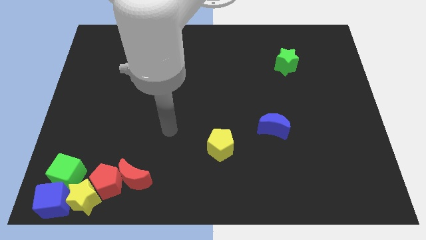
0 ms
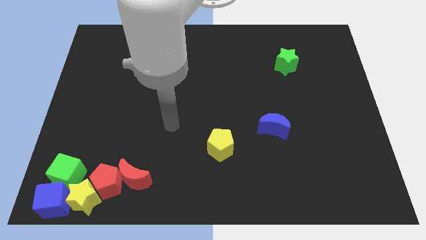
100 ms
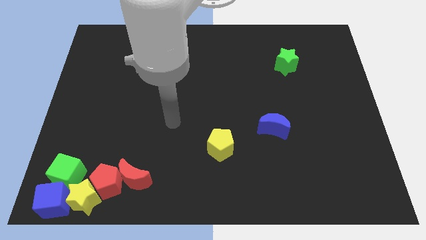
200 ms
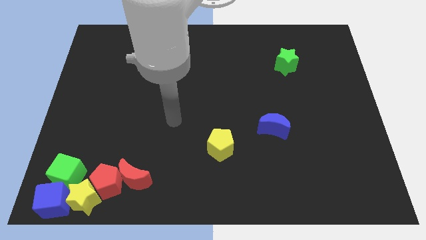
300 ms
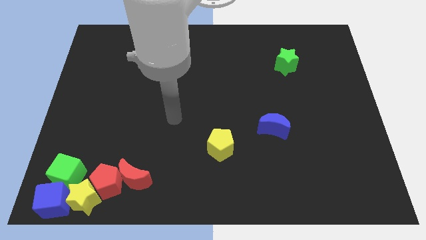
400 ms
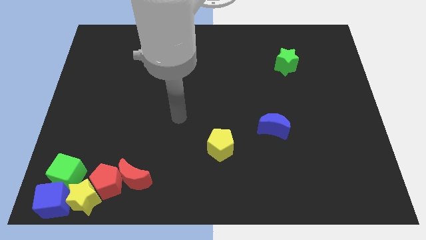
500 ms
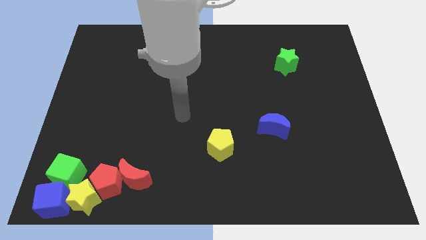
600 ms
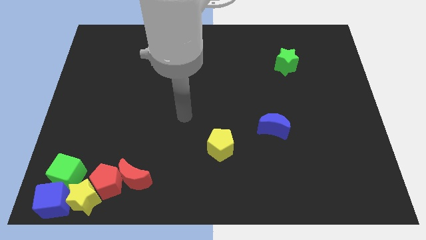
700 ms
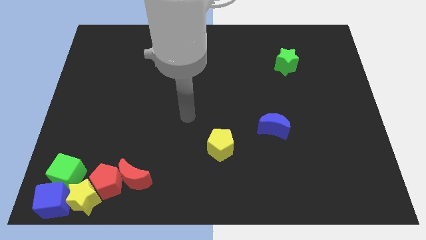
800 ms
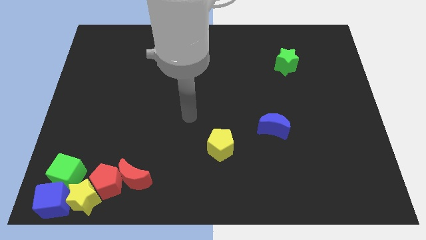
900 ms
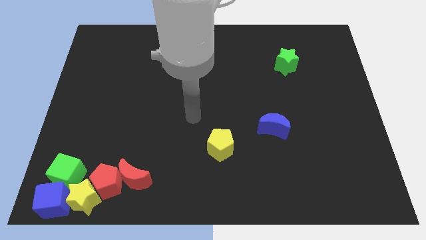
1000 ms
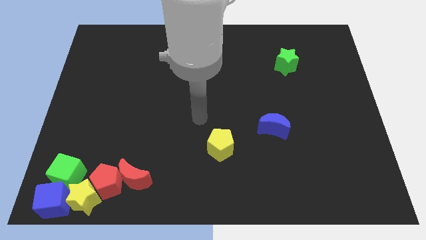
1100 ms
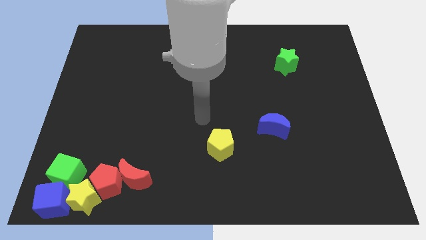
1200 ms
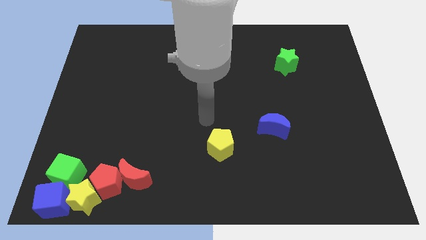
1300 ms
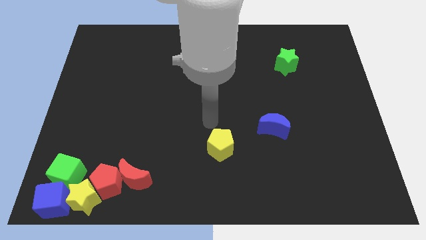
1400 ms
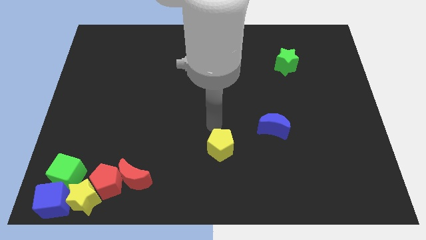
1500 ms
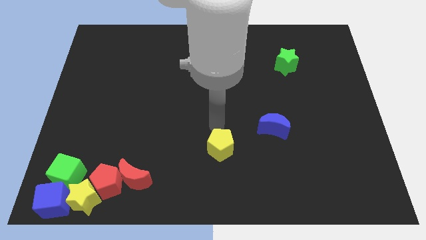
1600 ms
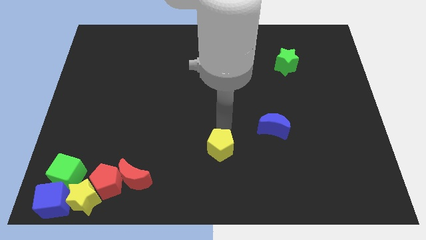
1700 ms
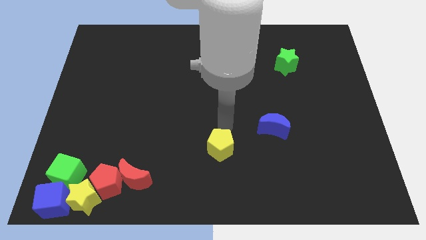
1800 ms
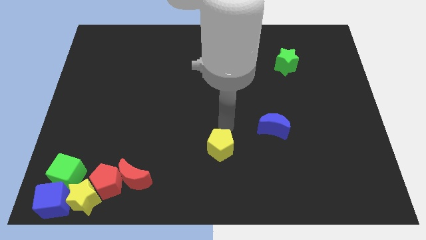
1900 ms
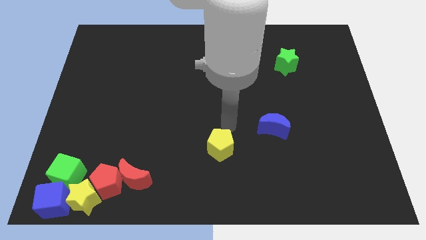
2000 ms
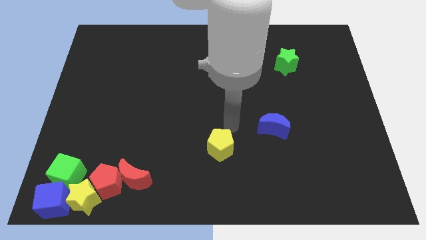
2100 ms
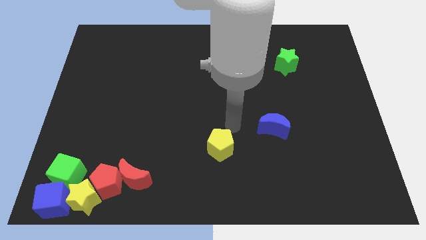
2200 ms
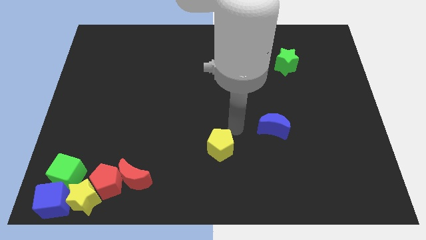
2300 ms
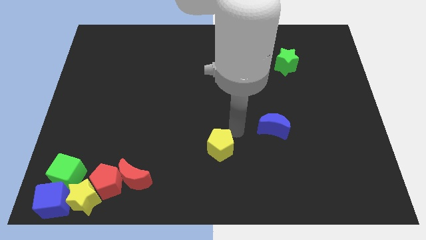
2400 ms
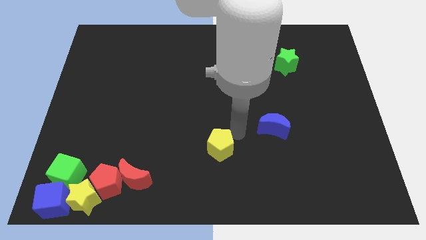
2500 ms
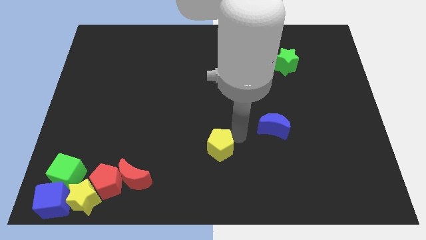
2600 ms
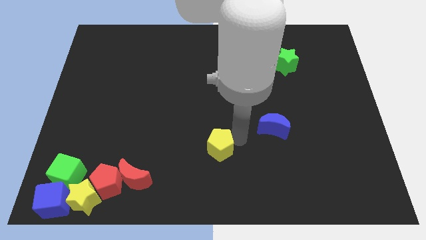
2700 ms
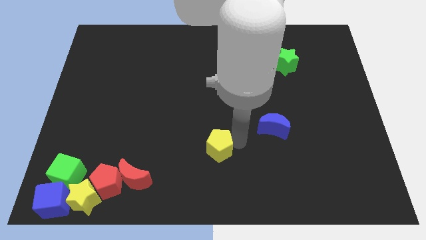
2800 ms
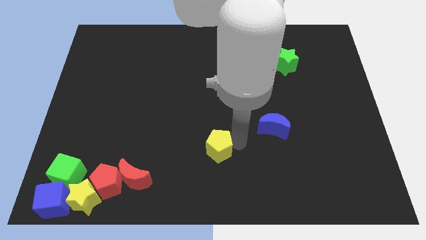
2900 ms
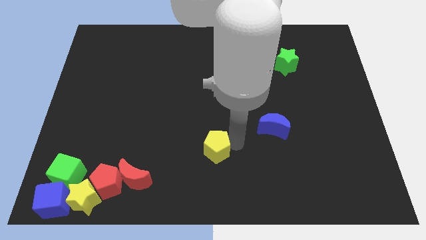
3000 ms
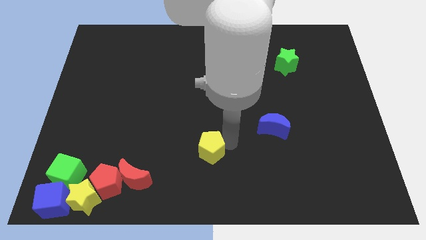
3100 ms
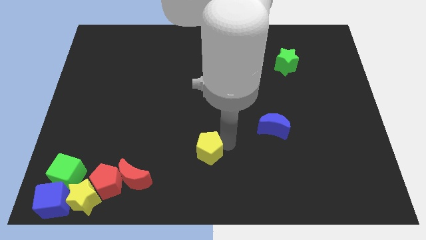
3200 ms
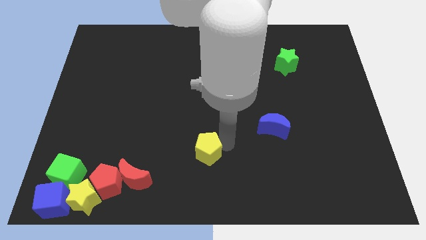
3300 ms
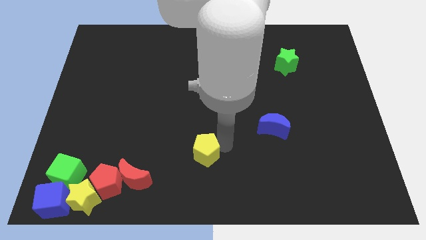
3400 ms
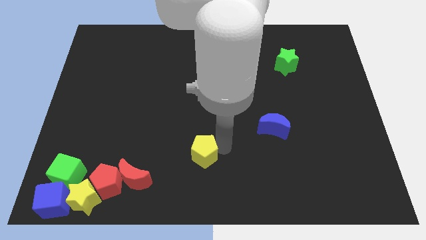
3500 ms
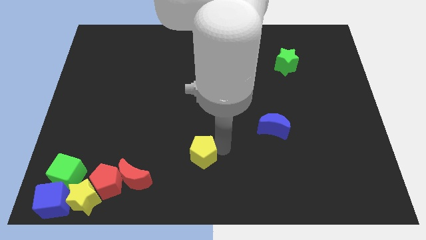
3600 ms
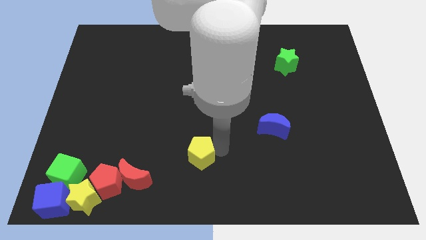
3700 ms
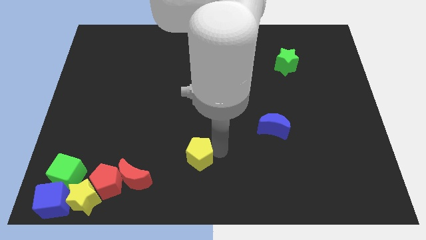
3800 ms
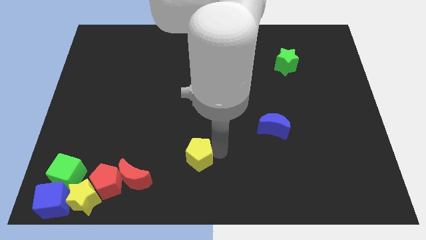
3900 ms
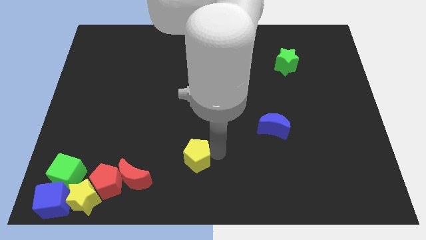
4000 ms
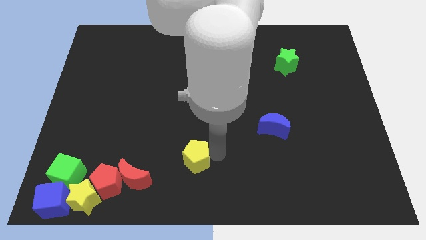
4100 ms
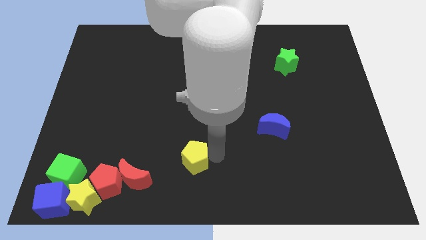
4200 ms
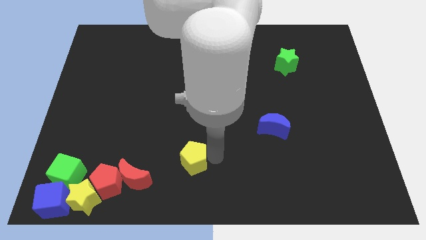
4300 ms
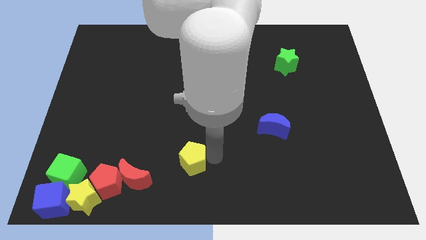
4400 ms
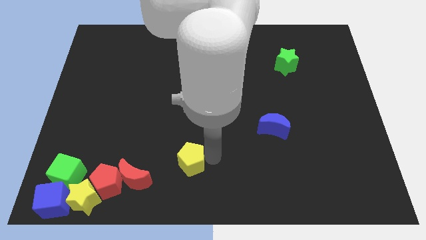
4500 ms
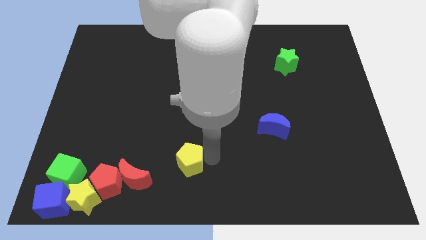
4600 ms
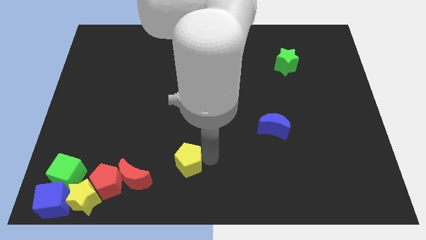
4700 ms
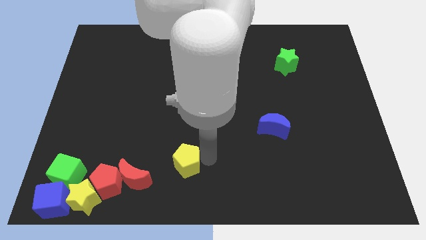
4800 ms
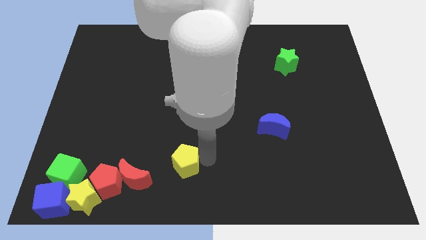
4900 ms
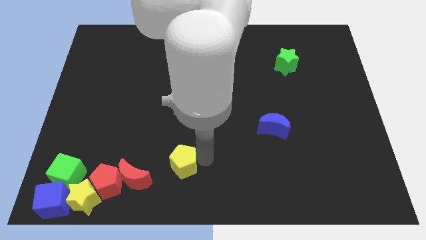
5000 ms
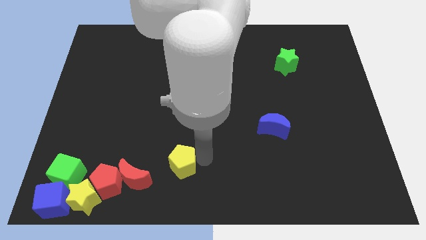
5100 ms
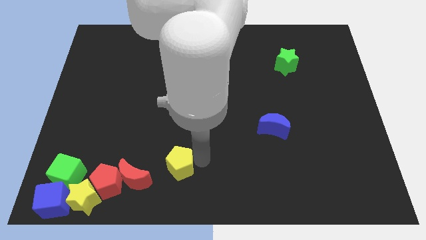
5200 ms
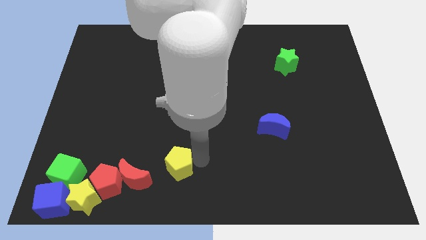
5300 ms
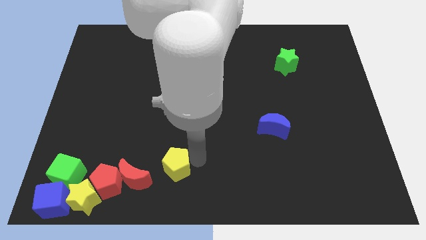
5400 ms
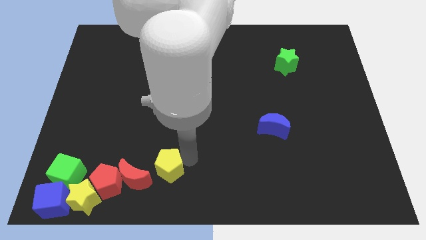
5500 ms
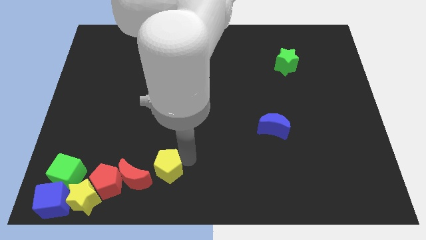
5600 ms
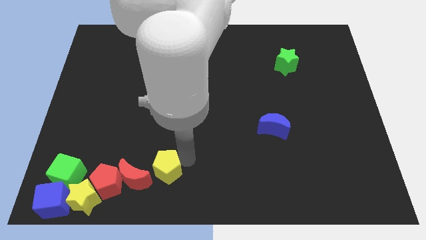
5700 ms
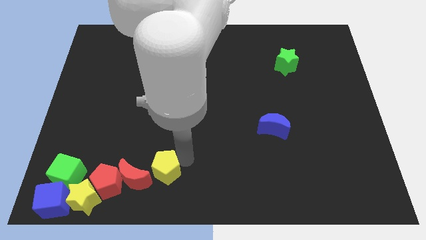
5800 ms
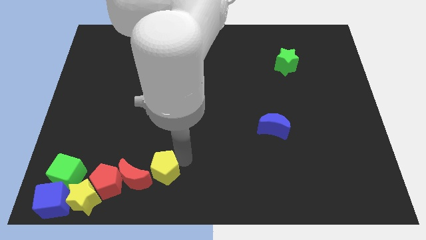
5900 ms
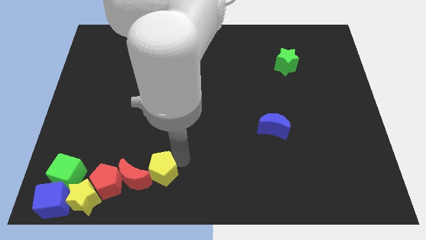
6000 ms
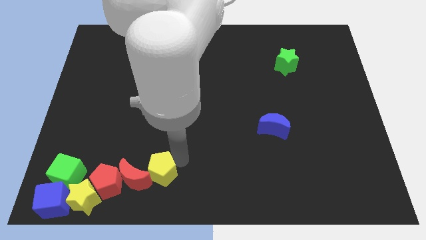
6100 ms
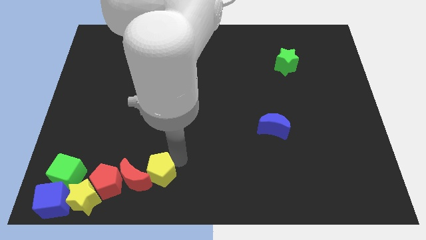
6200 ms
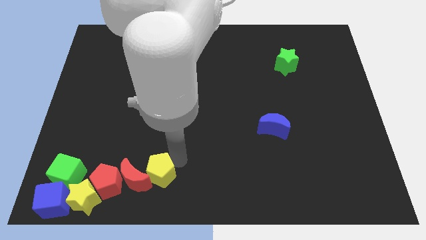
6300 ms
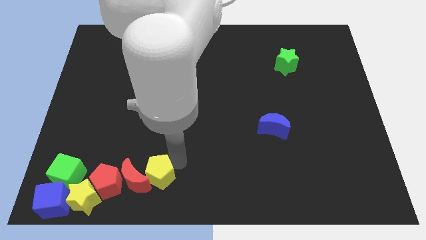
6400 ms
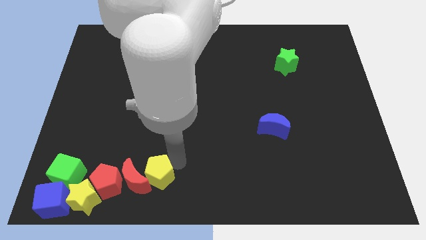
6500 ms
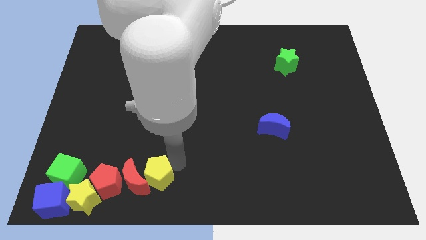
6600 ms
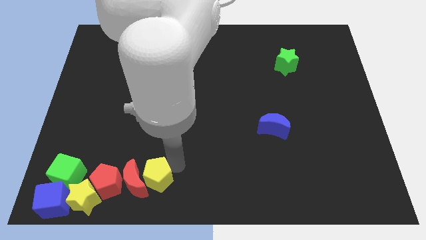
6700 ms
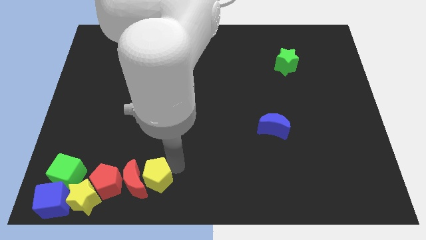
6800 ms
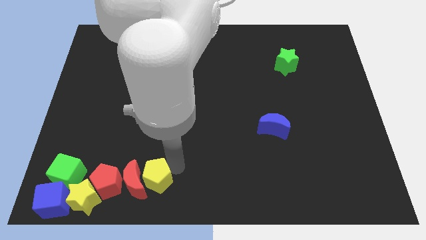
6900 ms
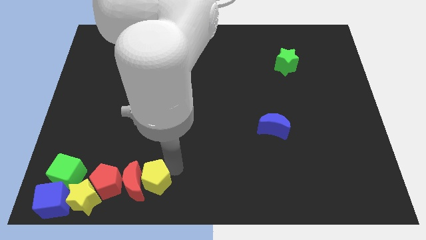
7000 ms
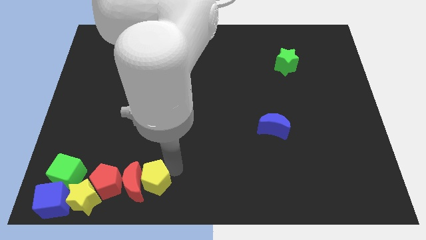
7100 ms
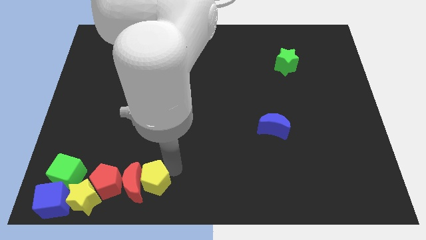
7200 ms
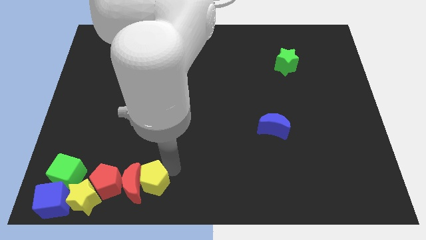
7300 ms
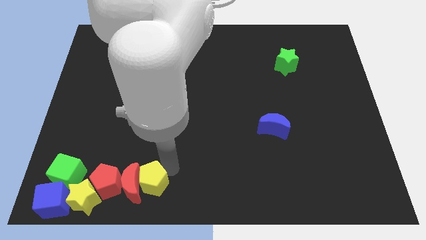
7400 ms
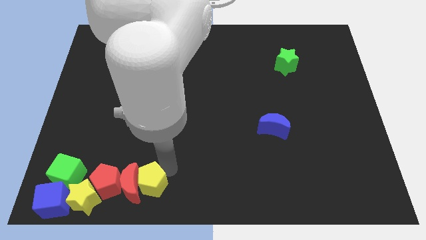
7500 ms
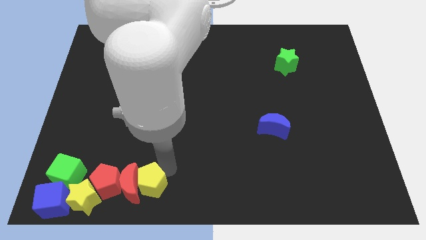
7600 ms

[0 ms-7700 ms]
put the yellow pentagon into the red crescent

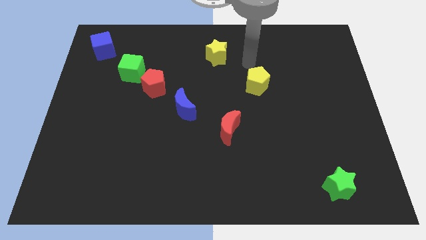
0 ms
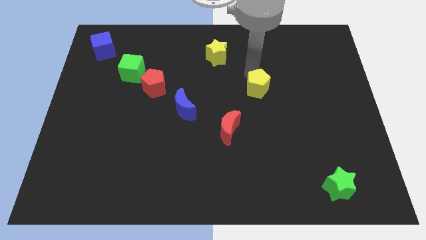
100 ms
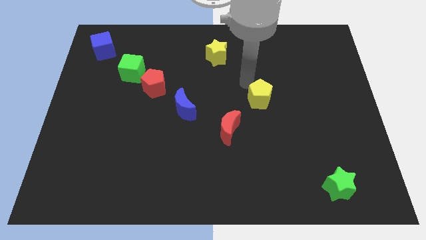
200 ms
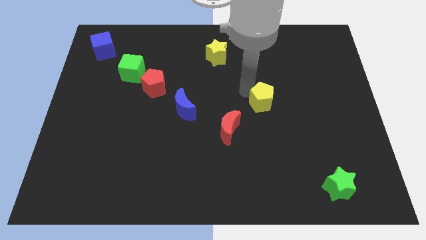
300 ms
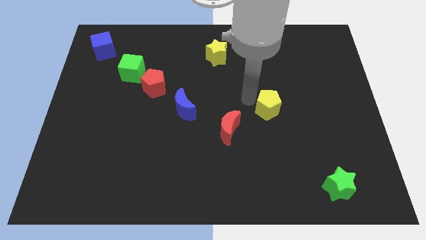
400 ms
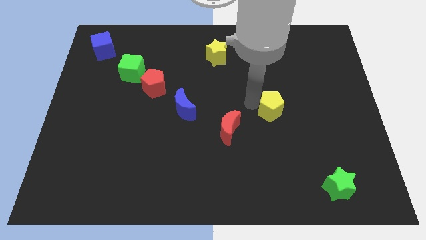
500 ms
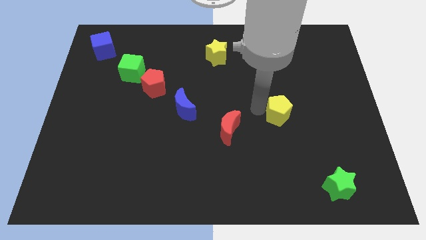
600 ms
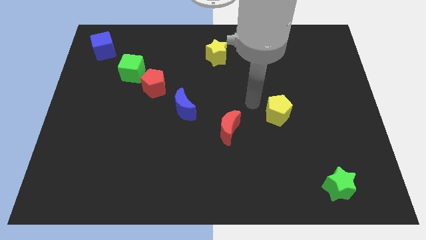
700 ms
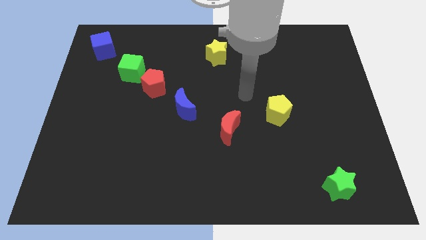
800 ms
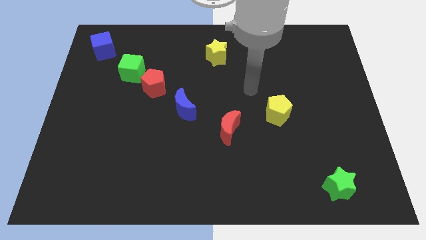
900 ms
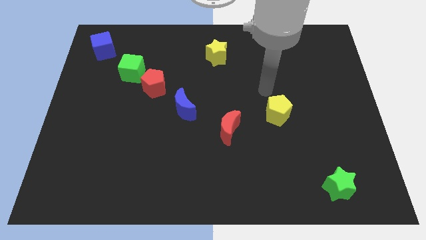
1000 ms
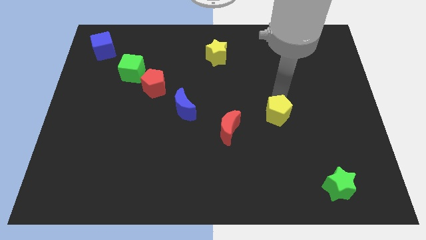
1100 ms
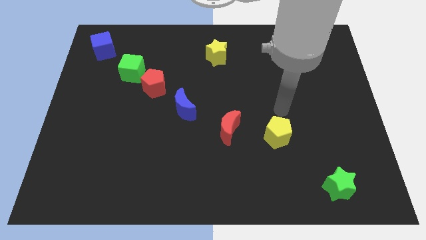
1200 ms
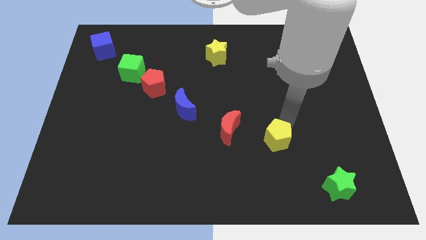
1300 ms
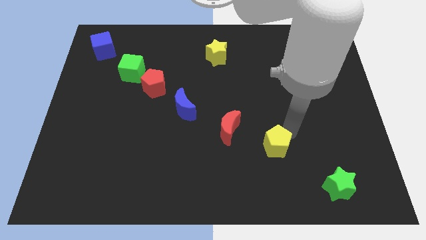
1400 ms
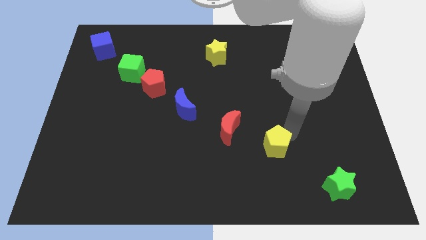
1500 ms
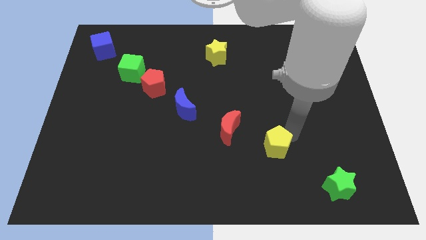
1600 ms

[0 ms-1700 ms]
place the yellow pentagon right to the red moon
